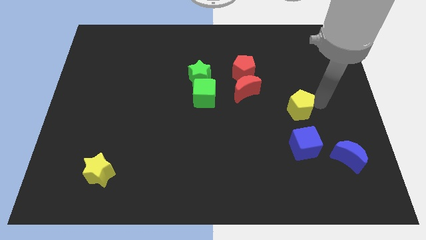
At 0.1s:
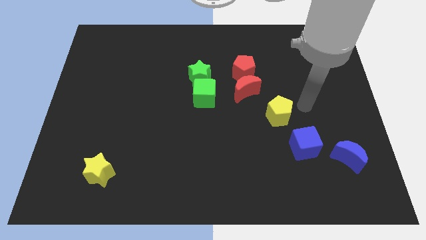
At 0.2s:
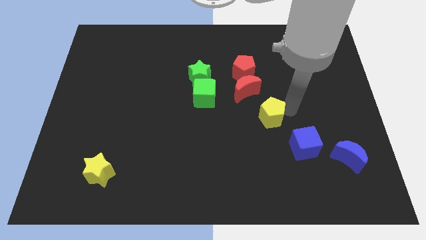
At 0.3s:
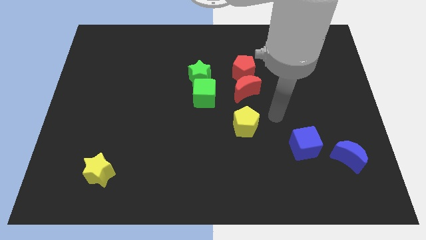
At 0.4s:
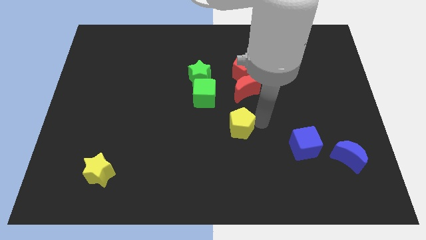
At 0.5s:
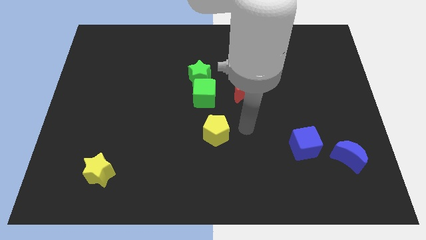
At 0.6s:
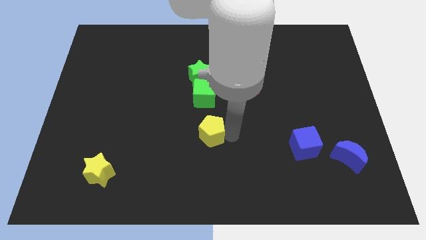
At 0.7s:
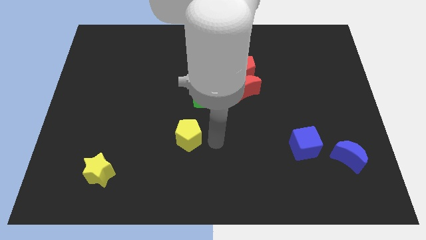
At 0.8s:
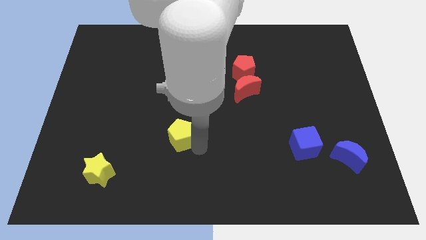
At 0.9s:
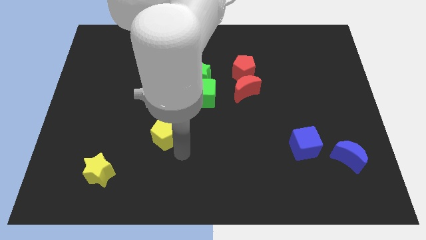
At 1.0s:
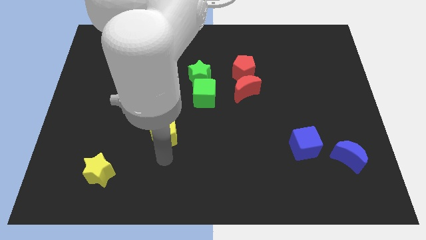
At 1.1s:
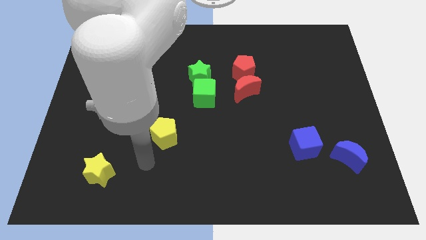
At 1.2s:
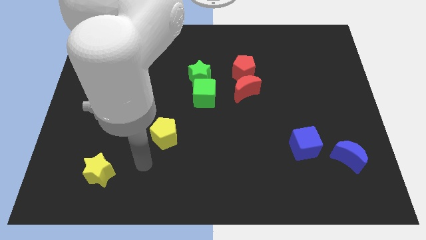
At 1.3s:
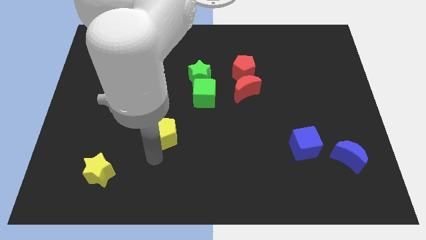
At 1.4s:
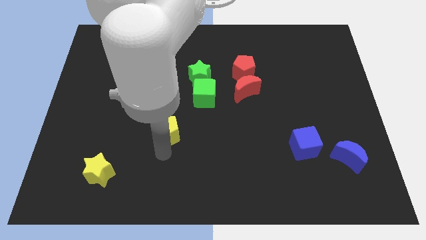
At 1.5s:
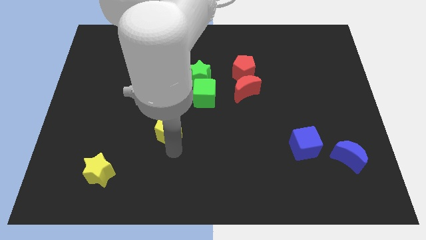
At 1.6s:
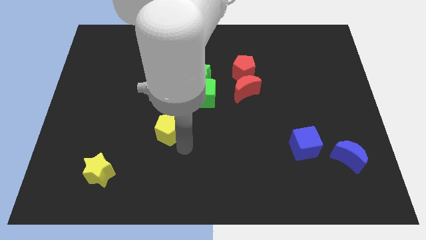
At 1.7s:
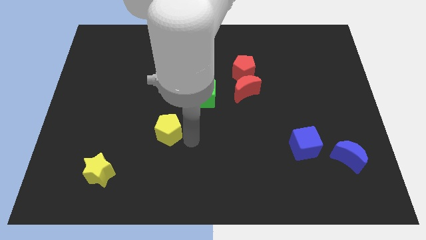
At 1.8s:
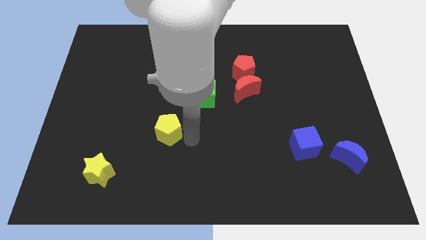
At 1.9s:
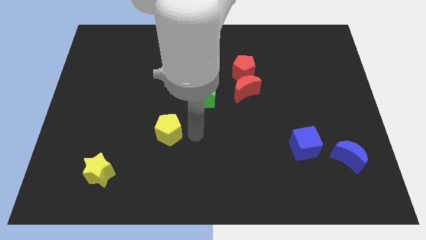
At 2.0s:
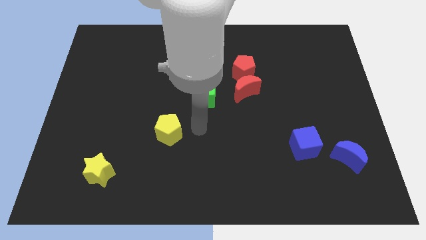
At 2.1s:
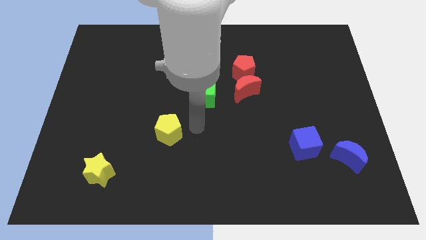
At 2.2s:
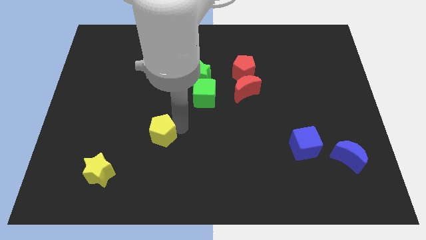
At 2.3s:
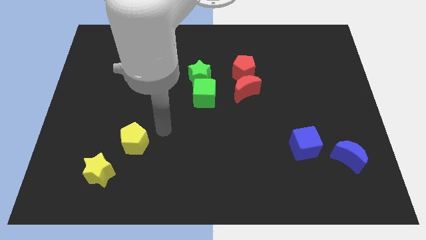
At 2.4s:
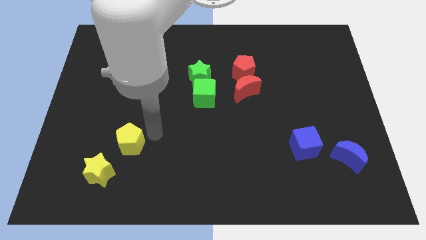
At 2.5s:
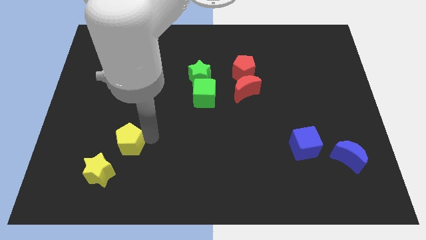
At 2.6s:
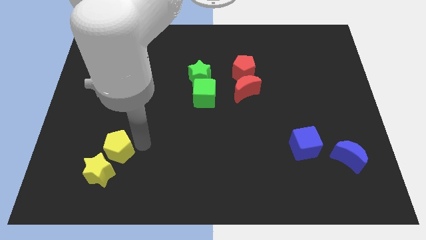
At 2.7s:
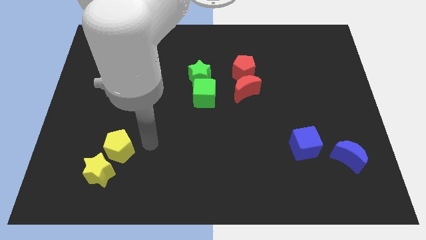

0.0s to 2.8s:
move yellow pentagon on top right to yellow star

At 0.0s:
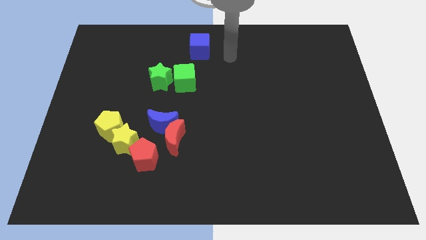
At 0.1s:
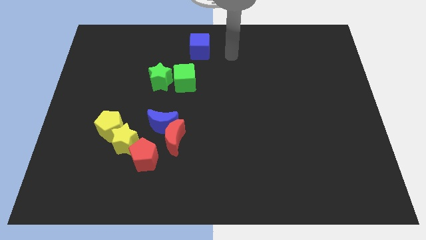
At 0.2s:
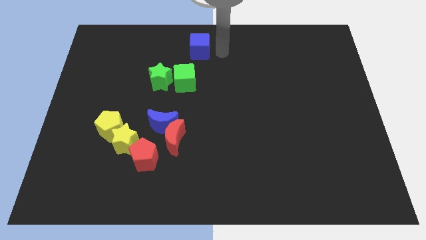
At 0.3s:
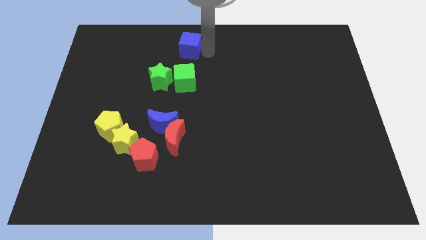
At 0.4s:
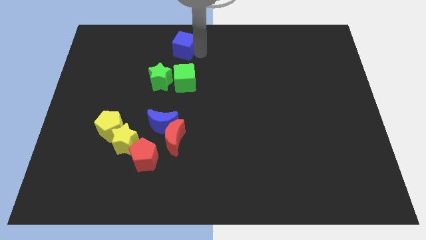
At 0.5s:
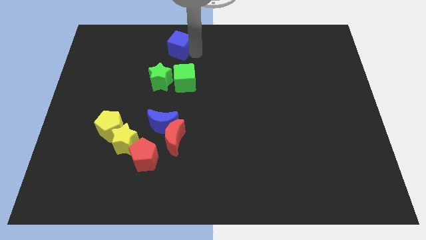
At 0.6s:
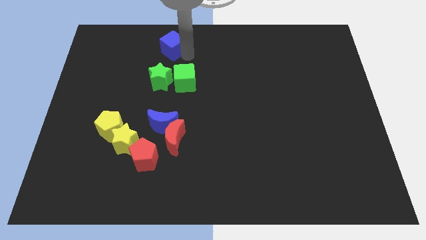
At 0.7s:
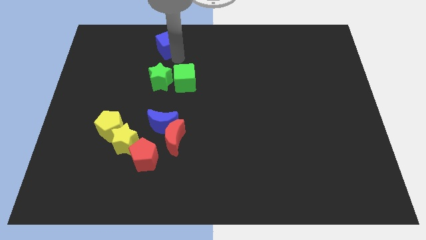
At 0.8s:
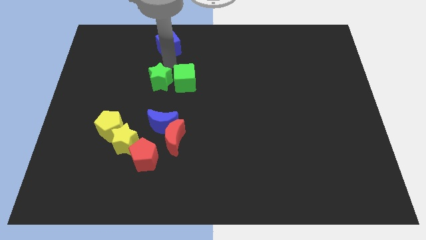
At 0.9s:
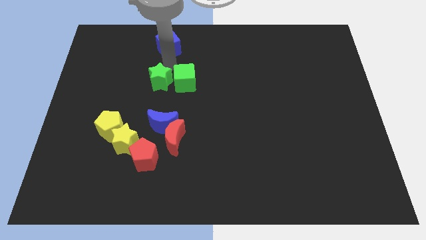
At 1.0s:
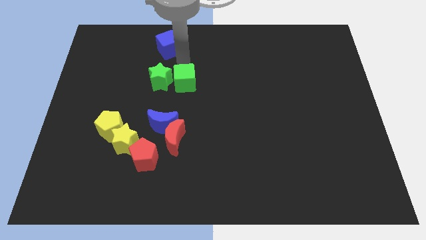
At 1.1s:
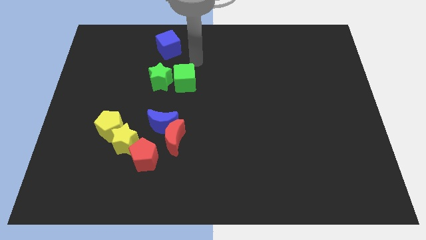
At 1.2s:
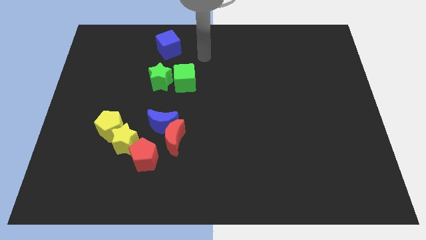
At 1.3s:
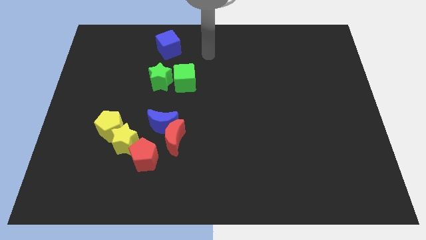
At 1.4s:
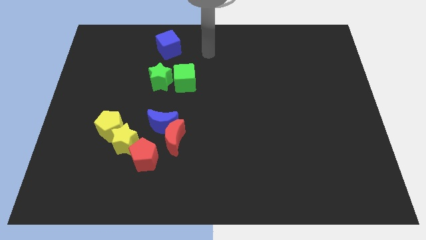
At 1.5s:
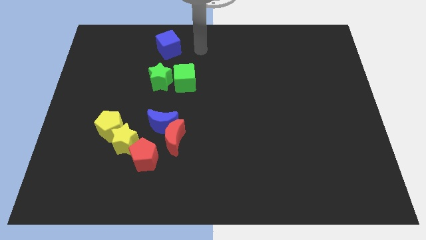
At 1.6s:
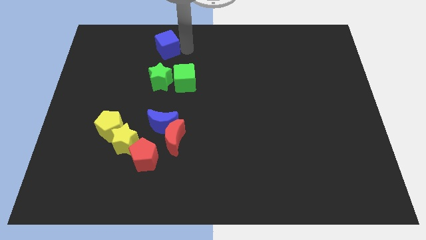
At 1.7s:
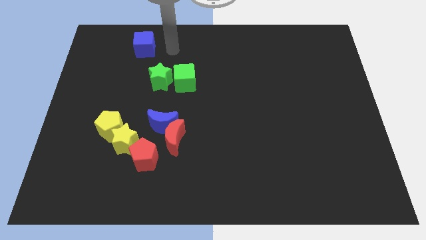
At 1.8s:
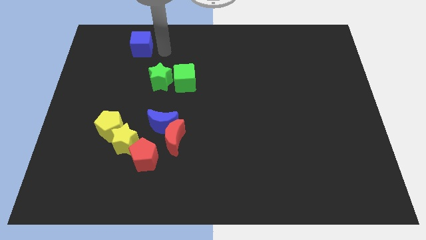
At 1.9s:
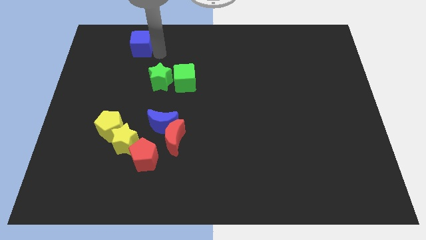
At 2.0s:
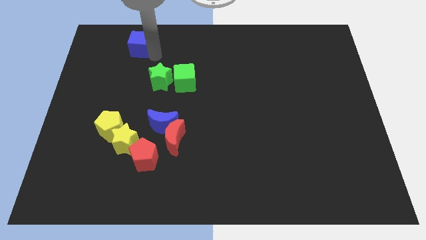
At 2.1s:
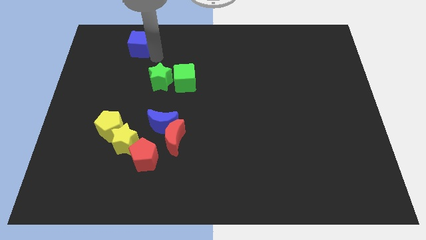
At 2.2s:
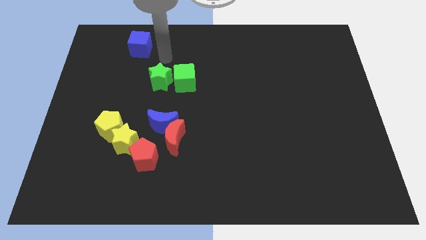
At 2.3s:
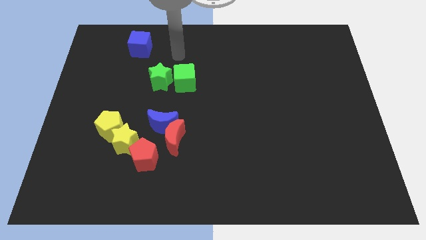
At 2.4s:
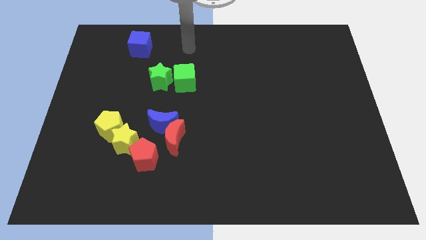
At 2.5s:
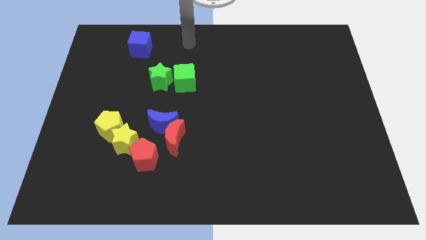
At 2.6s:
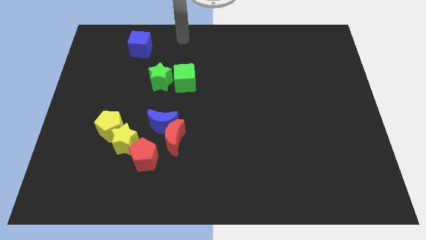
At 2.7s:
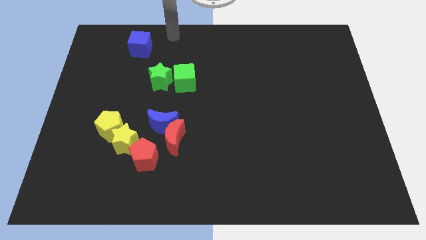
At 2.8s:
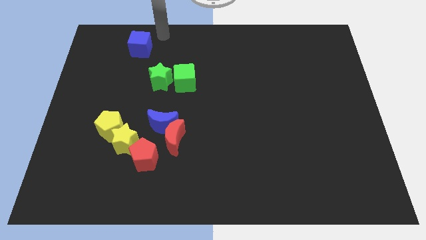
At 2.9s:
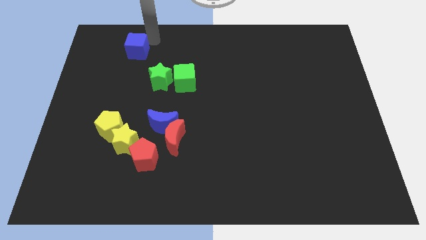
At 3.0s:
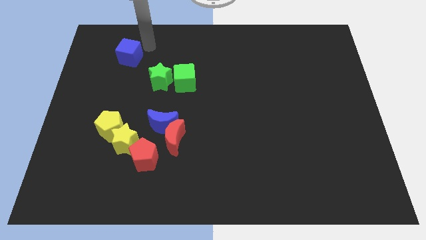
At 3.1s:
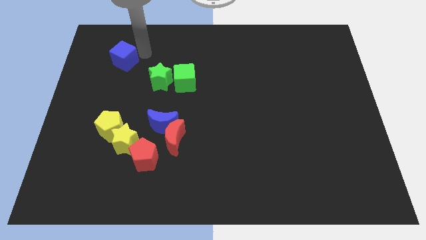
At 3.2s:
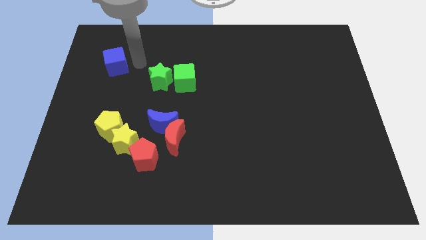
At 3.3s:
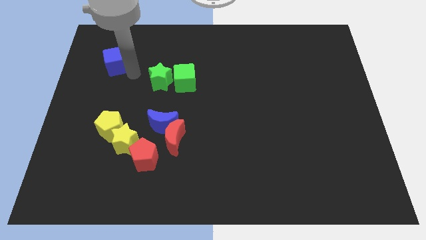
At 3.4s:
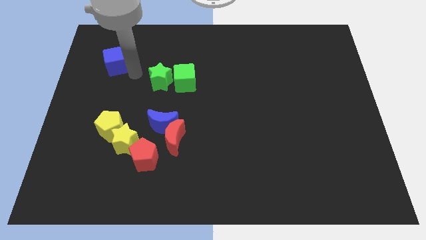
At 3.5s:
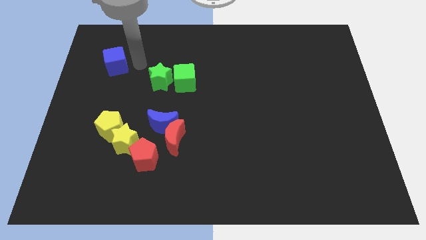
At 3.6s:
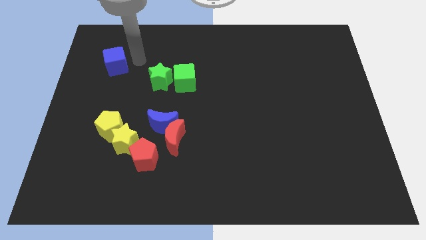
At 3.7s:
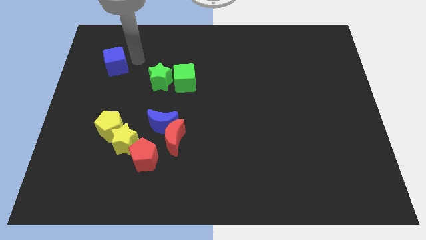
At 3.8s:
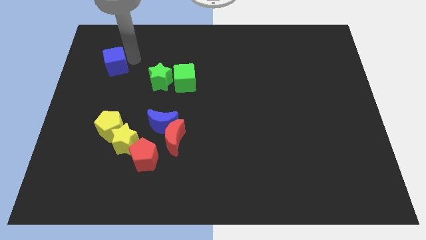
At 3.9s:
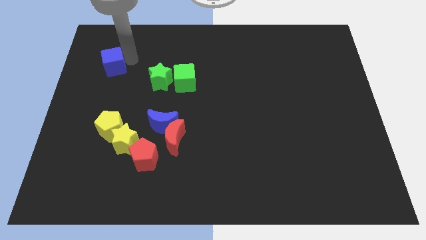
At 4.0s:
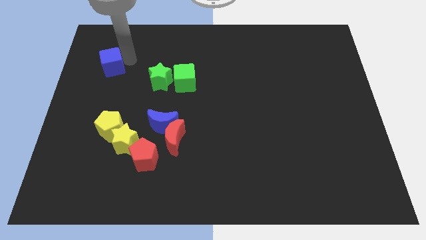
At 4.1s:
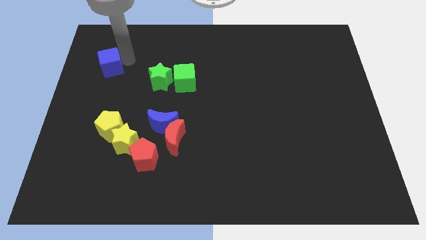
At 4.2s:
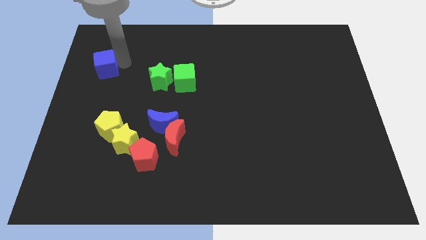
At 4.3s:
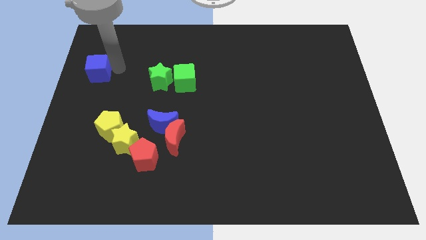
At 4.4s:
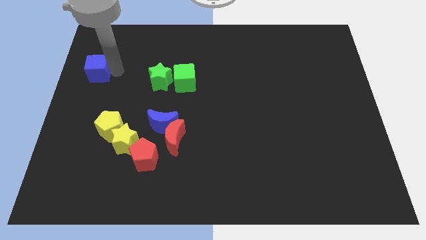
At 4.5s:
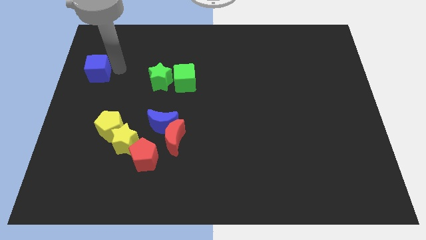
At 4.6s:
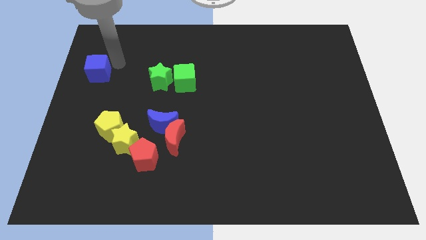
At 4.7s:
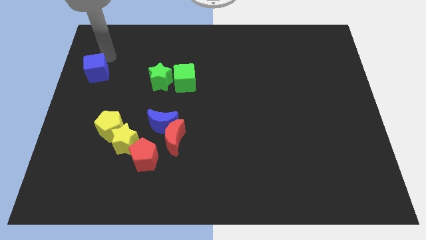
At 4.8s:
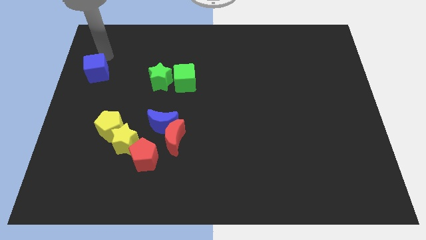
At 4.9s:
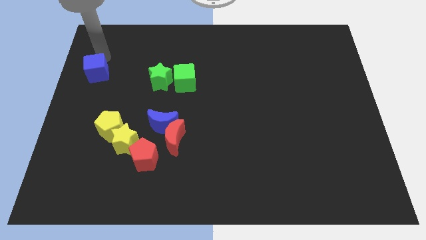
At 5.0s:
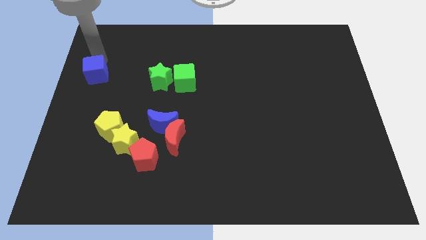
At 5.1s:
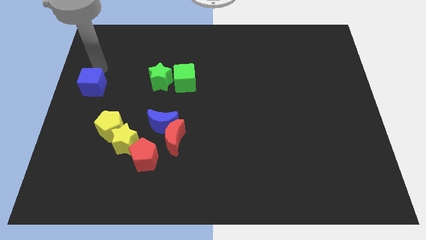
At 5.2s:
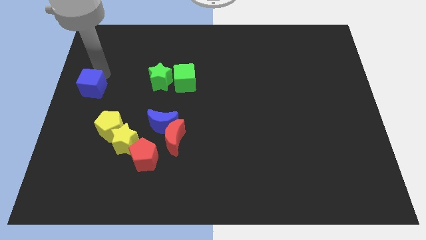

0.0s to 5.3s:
place the blue cube to the center left

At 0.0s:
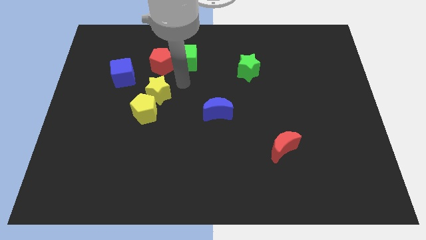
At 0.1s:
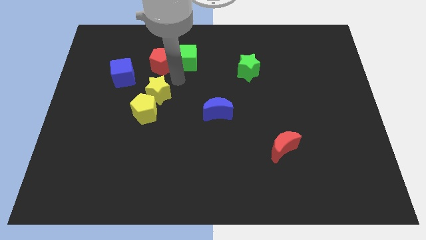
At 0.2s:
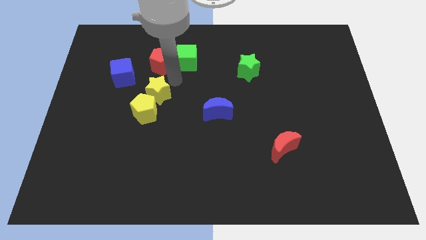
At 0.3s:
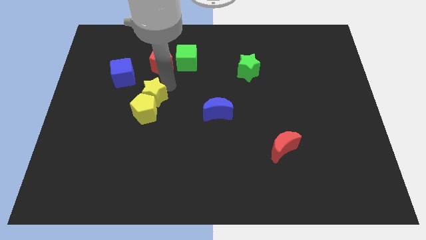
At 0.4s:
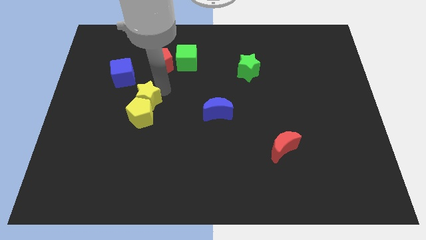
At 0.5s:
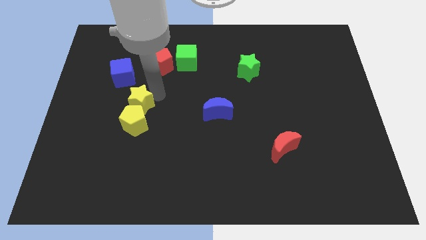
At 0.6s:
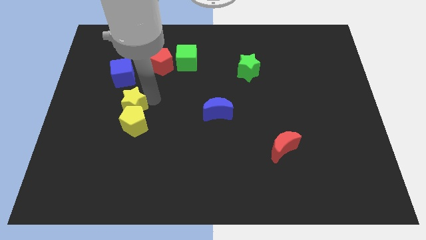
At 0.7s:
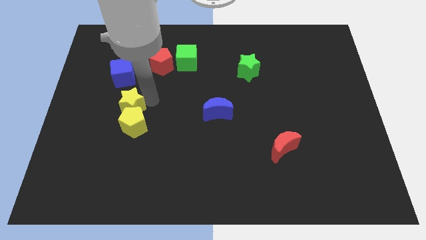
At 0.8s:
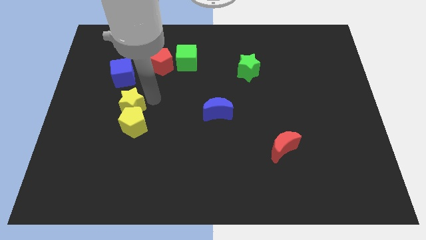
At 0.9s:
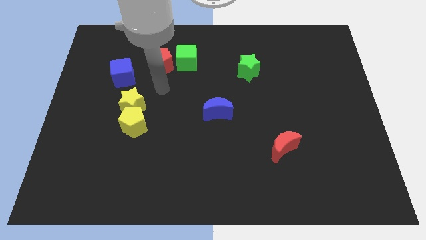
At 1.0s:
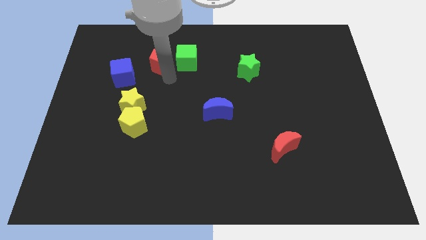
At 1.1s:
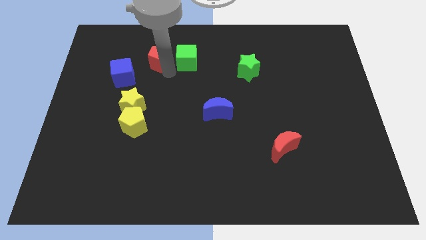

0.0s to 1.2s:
push the yellow blocks vertically below the blue cube
